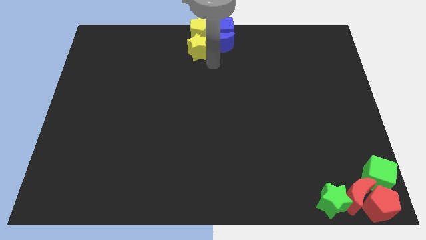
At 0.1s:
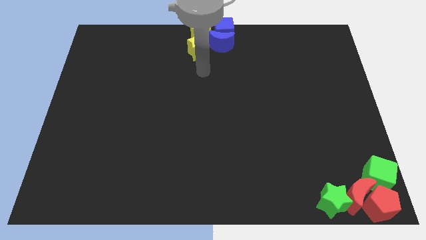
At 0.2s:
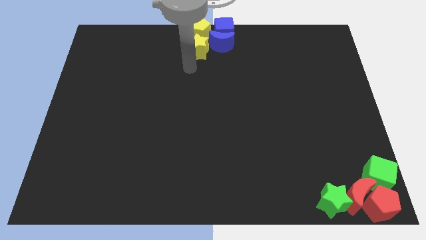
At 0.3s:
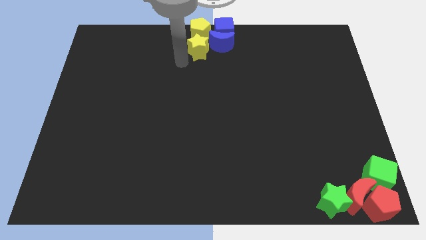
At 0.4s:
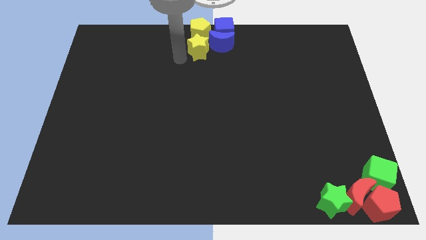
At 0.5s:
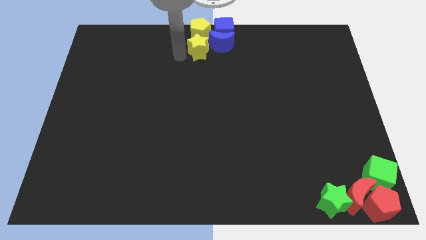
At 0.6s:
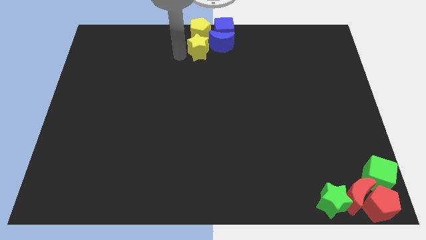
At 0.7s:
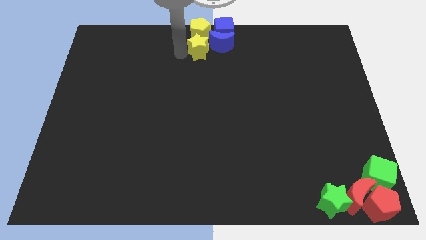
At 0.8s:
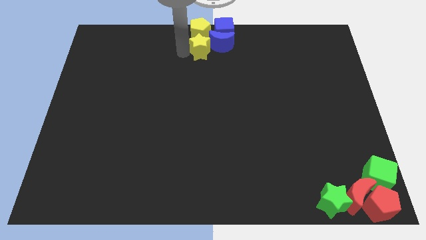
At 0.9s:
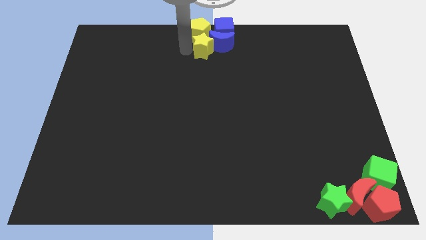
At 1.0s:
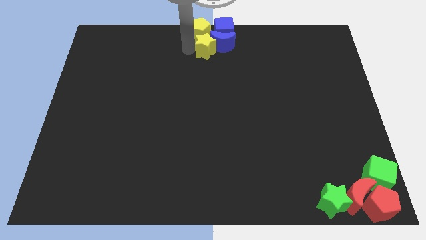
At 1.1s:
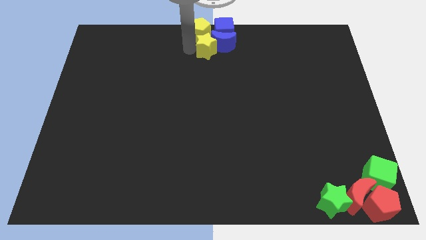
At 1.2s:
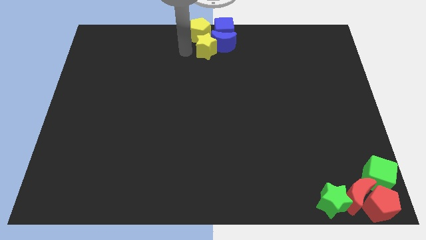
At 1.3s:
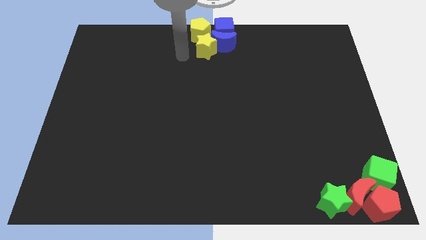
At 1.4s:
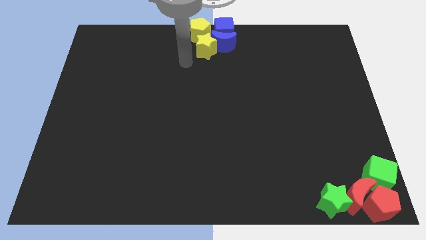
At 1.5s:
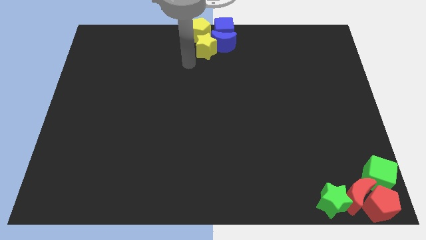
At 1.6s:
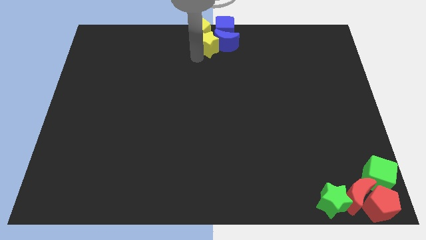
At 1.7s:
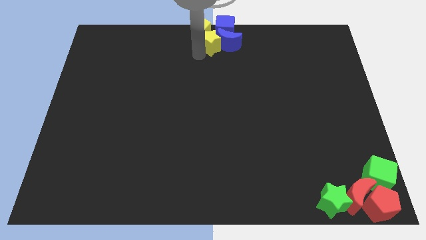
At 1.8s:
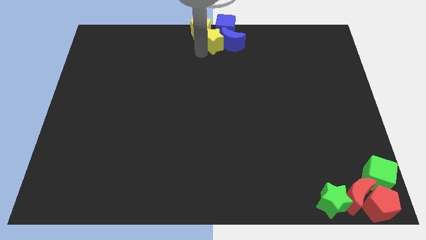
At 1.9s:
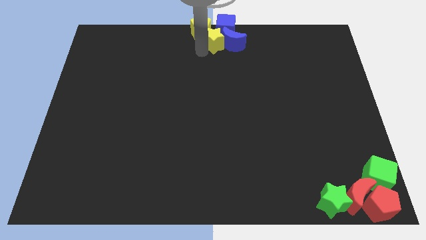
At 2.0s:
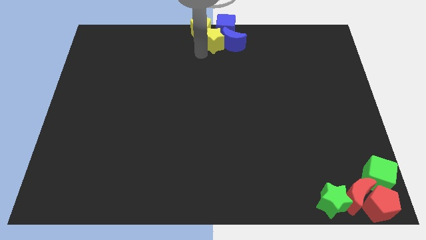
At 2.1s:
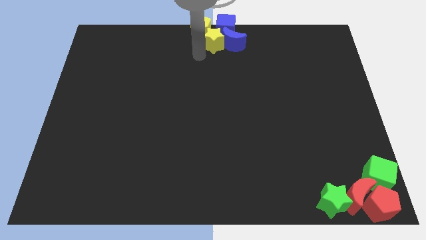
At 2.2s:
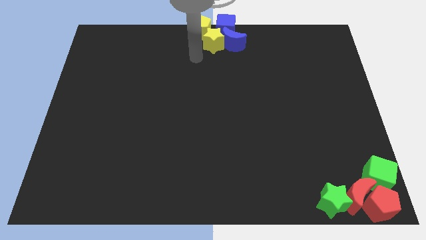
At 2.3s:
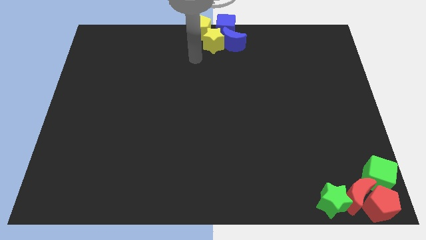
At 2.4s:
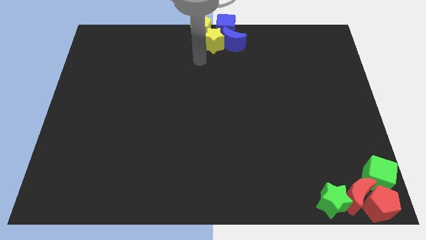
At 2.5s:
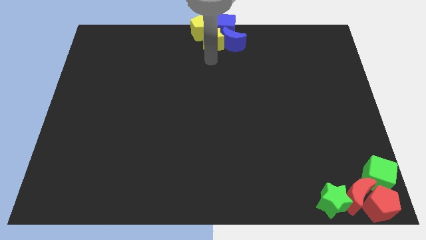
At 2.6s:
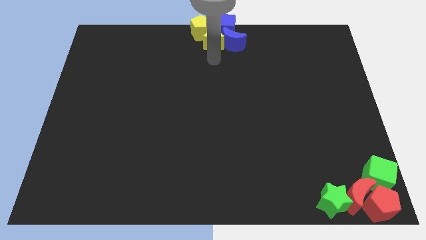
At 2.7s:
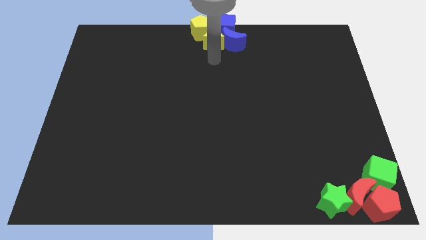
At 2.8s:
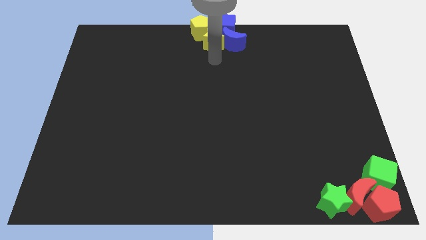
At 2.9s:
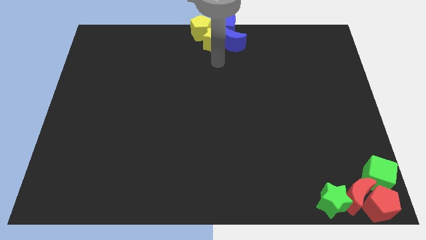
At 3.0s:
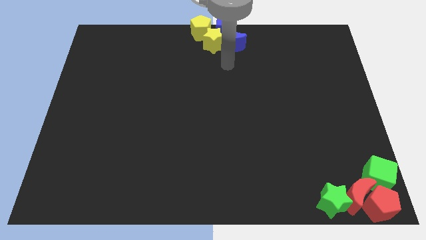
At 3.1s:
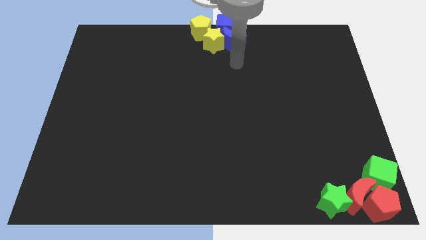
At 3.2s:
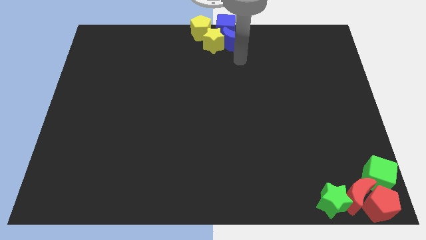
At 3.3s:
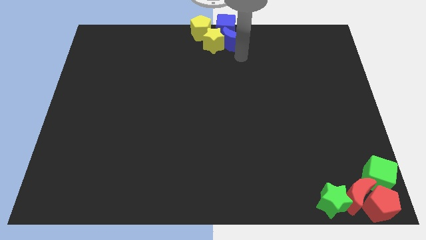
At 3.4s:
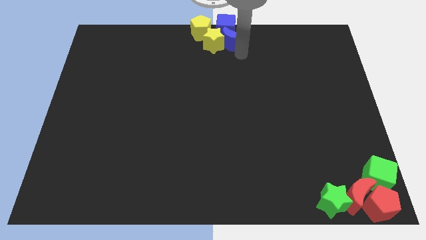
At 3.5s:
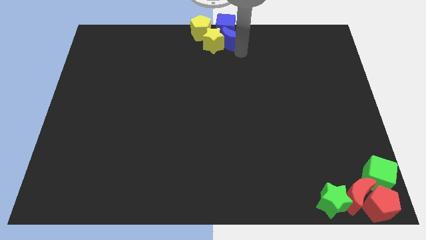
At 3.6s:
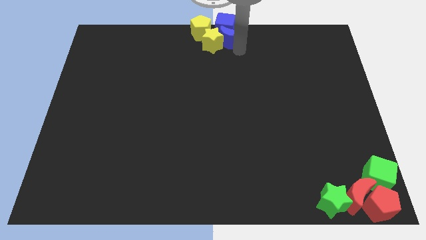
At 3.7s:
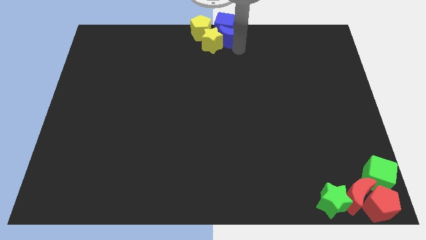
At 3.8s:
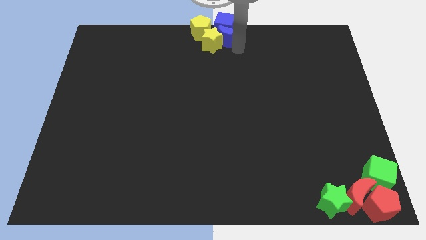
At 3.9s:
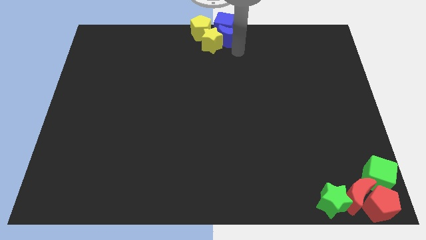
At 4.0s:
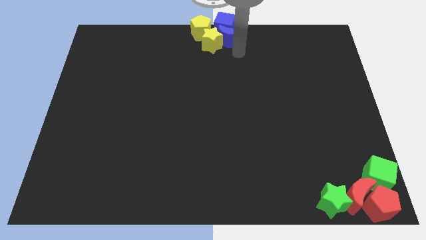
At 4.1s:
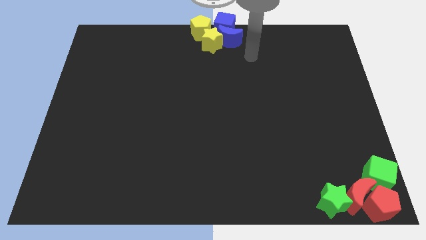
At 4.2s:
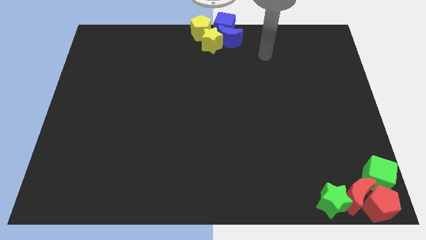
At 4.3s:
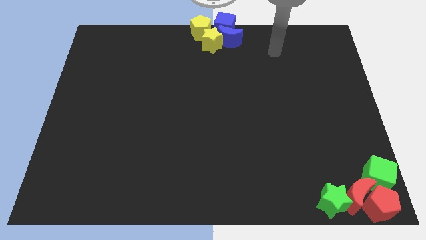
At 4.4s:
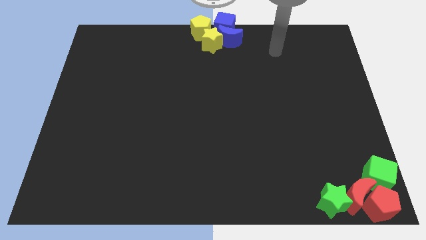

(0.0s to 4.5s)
adjust all the yellow and blue blocks at the top center of the board

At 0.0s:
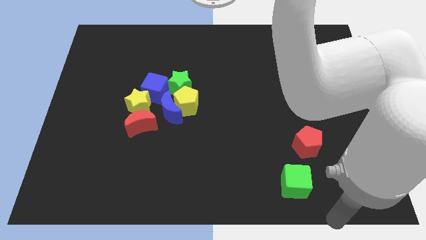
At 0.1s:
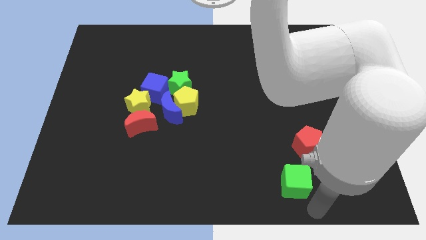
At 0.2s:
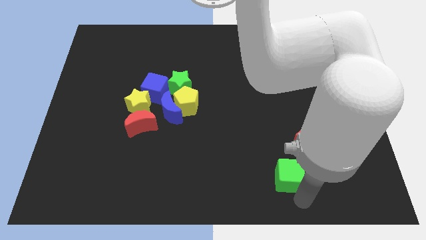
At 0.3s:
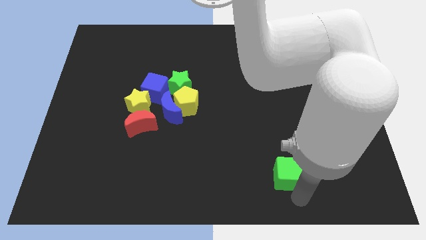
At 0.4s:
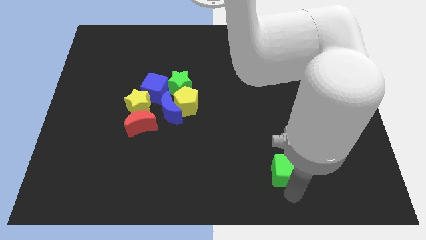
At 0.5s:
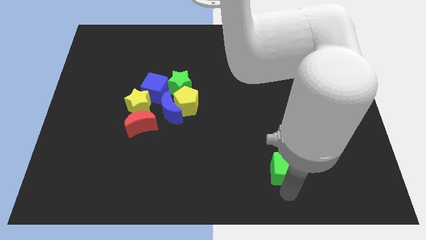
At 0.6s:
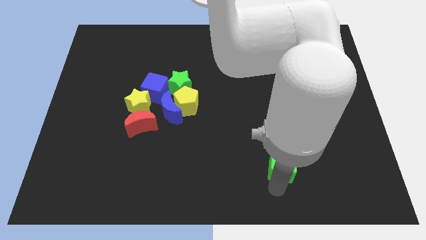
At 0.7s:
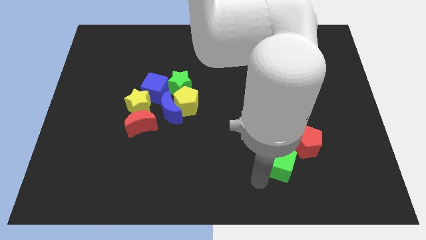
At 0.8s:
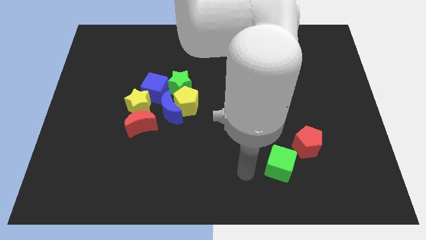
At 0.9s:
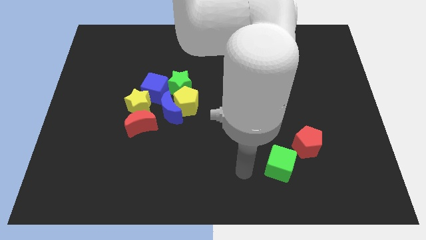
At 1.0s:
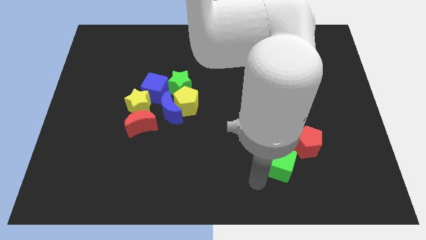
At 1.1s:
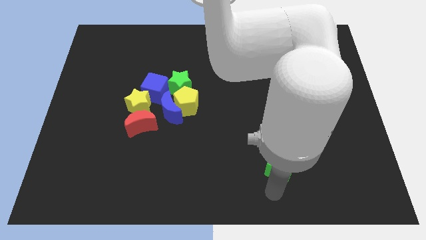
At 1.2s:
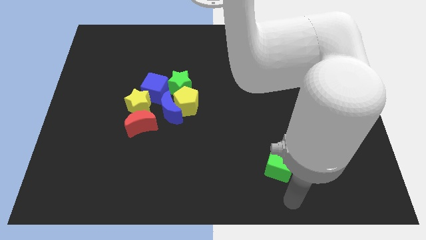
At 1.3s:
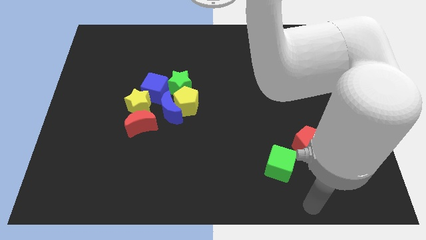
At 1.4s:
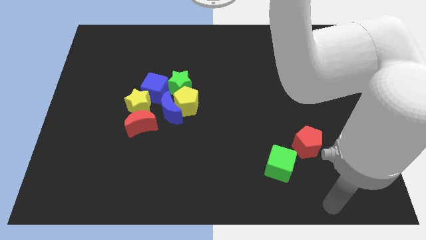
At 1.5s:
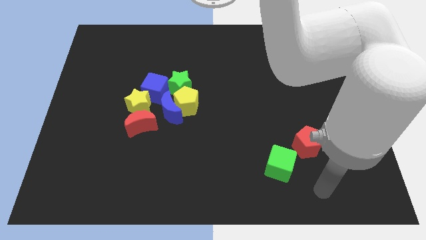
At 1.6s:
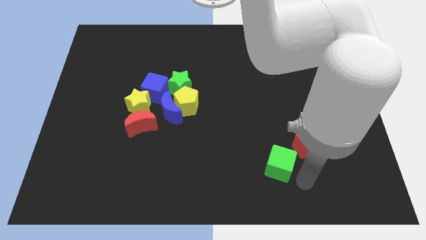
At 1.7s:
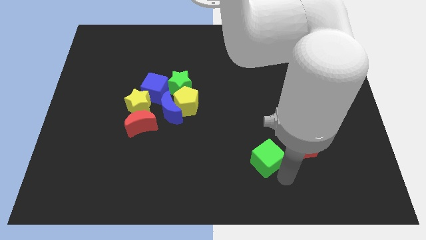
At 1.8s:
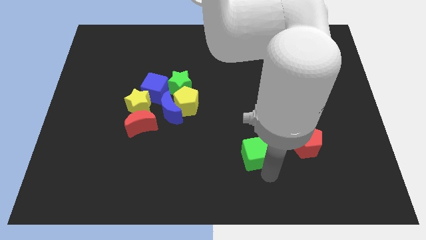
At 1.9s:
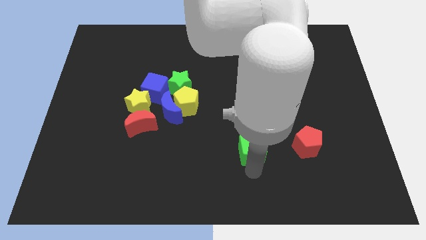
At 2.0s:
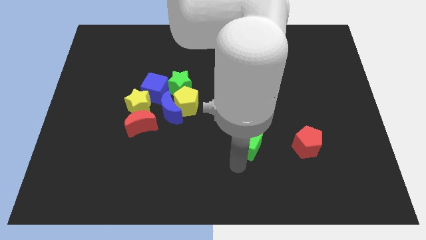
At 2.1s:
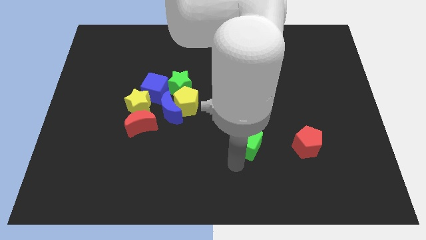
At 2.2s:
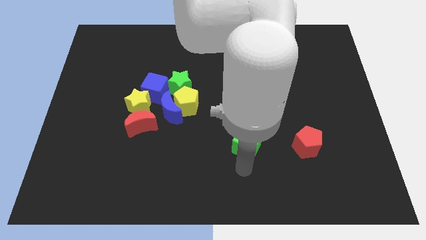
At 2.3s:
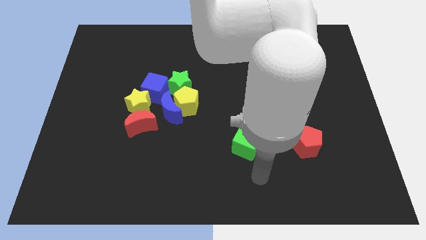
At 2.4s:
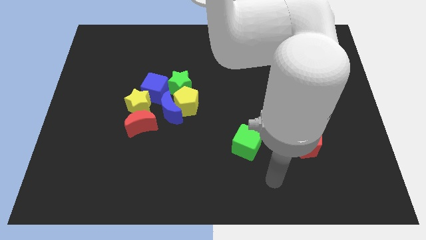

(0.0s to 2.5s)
move the green cube on the left side of the red pentagon

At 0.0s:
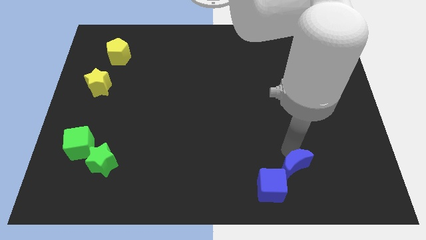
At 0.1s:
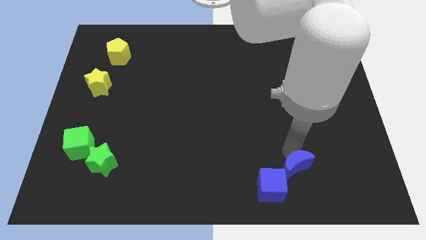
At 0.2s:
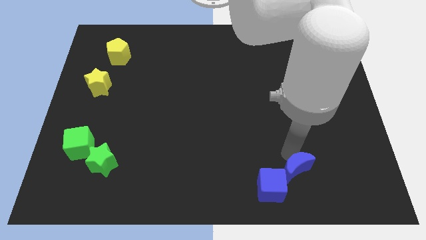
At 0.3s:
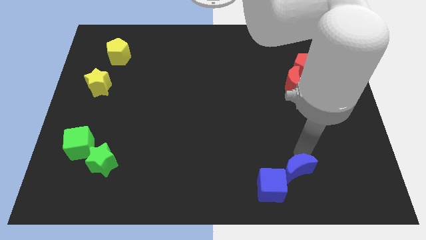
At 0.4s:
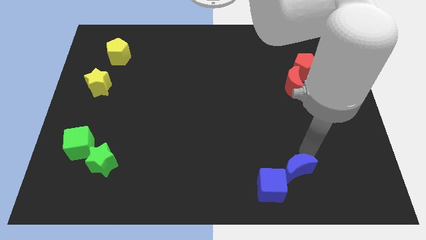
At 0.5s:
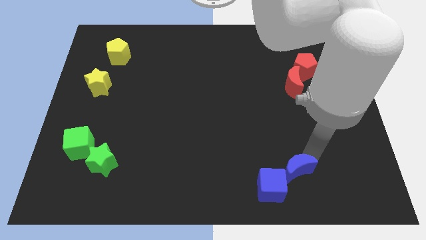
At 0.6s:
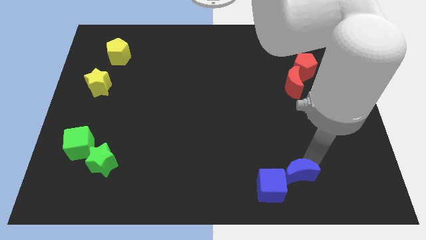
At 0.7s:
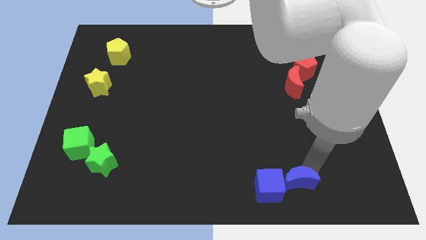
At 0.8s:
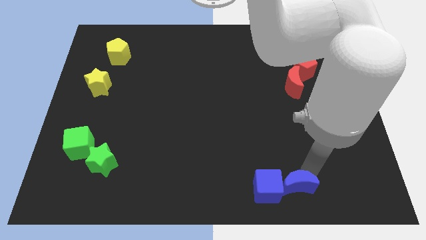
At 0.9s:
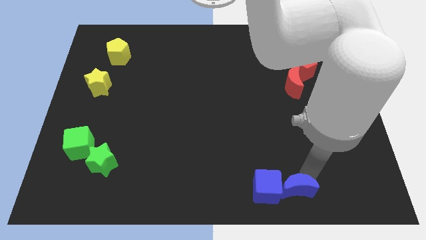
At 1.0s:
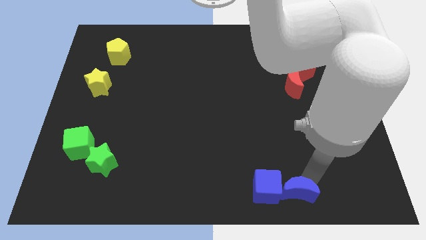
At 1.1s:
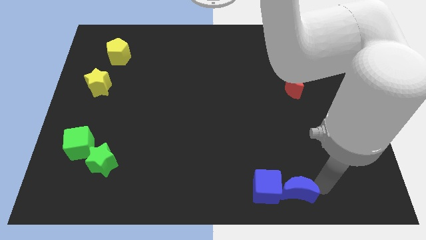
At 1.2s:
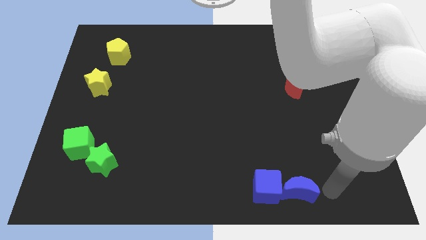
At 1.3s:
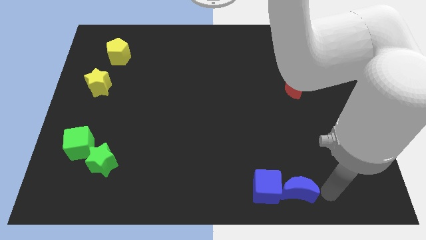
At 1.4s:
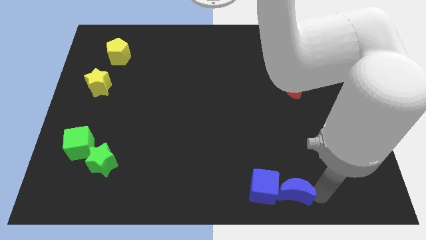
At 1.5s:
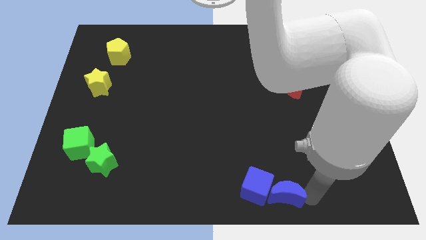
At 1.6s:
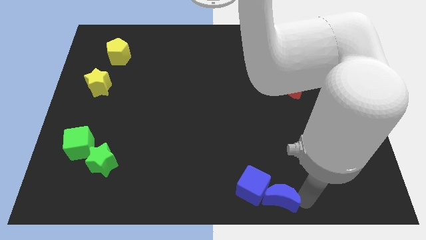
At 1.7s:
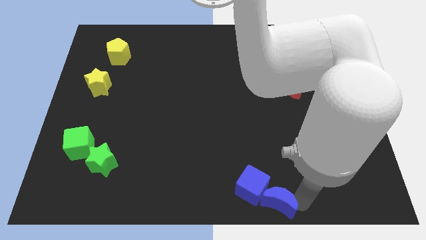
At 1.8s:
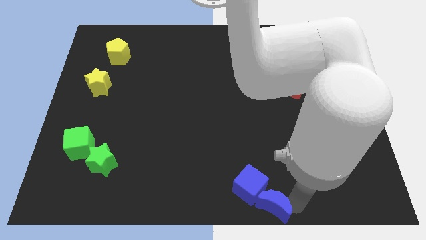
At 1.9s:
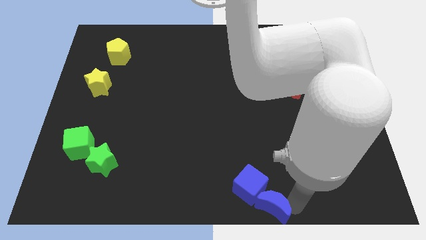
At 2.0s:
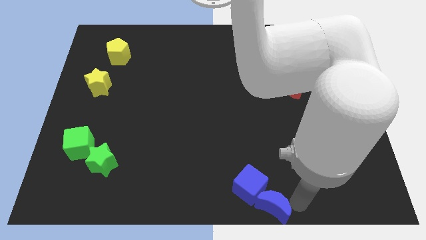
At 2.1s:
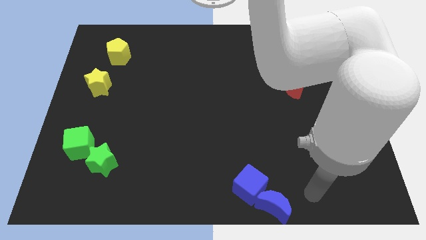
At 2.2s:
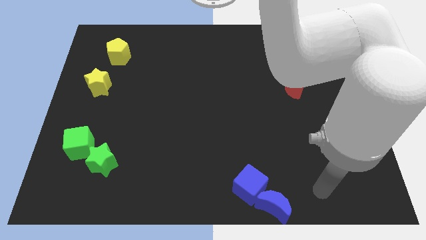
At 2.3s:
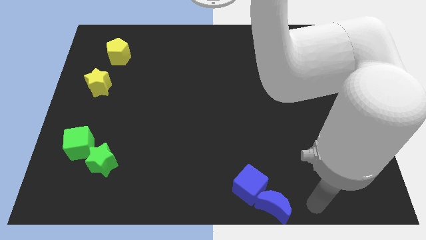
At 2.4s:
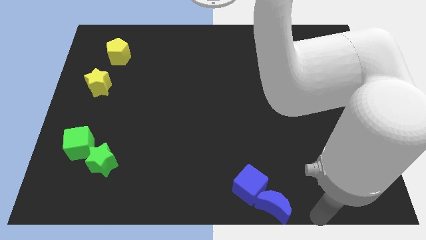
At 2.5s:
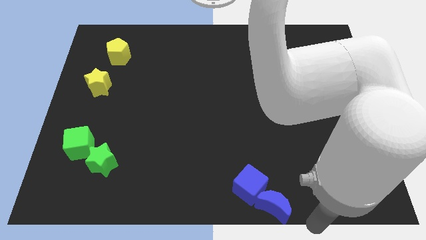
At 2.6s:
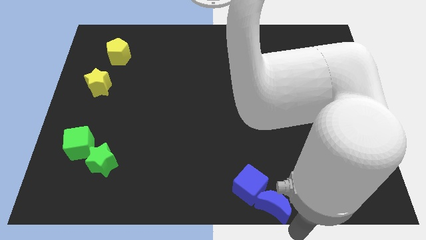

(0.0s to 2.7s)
move blue crescent into the blue cube
